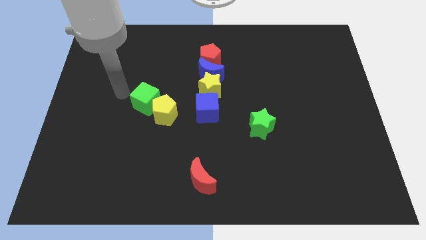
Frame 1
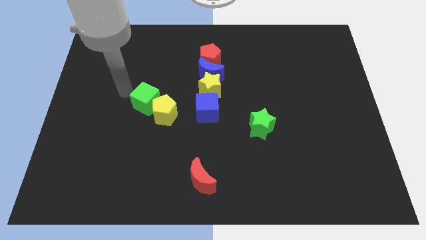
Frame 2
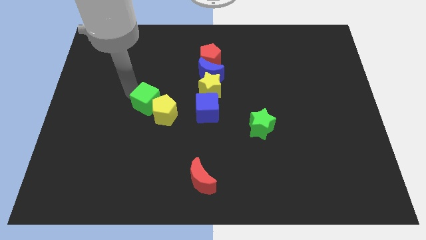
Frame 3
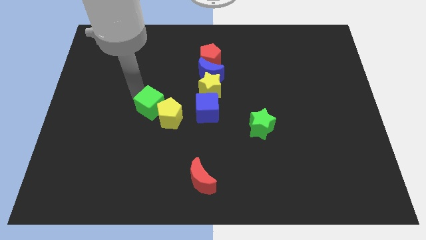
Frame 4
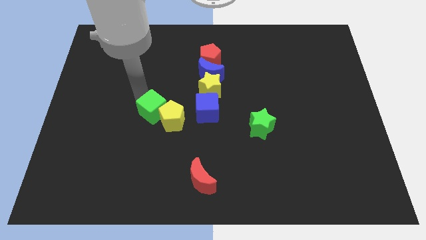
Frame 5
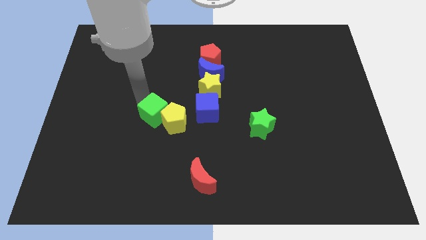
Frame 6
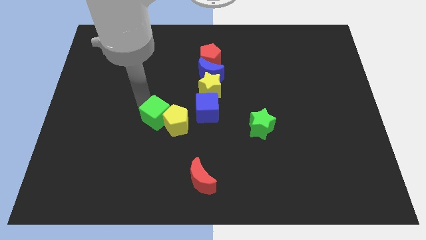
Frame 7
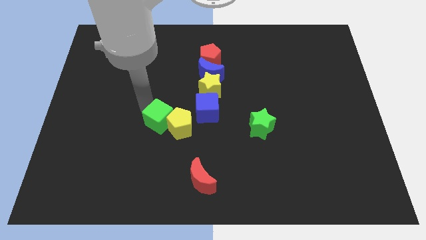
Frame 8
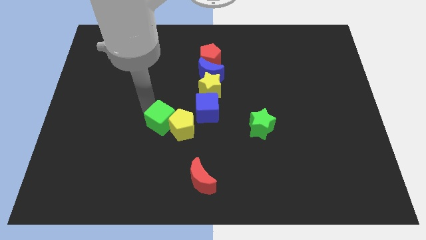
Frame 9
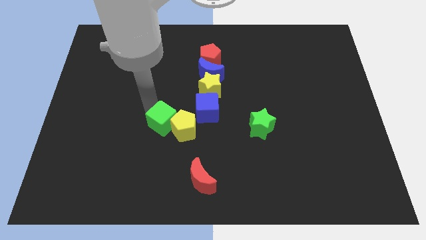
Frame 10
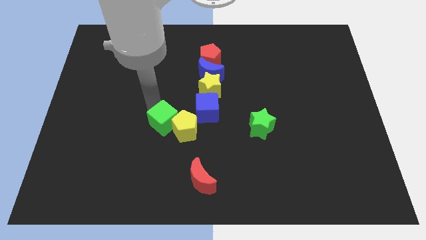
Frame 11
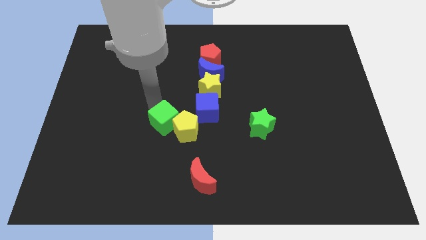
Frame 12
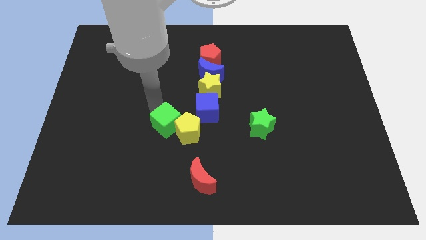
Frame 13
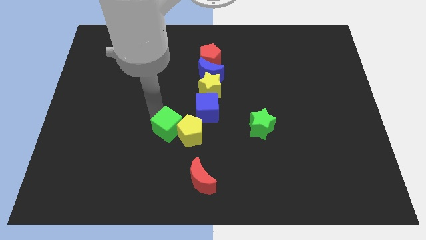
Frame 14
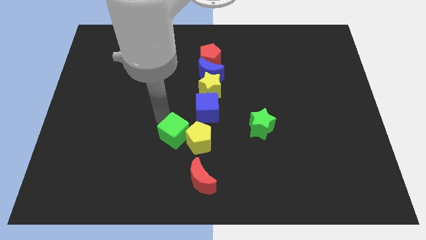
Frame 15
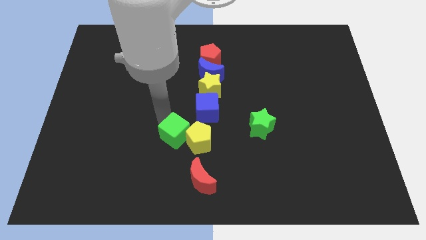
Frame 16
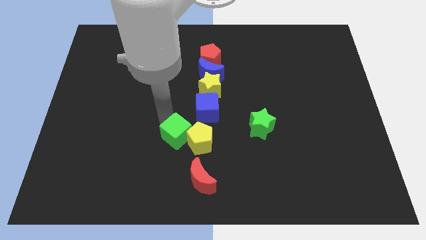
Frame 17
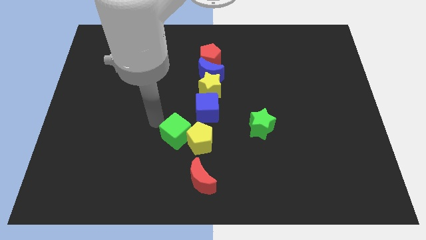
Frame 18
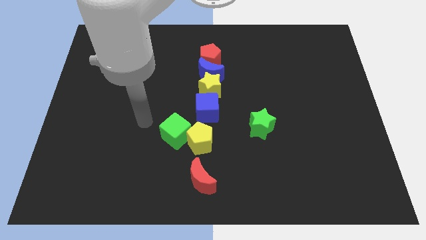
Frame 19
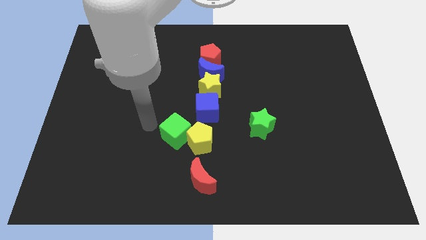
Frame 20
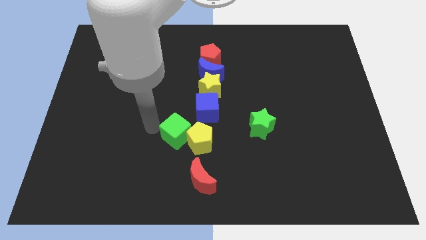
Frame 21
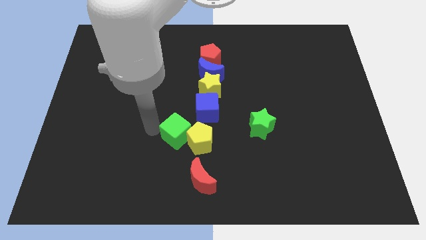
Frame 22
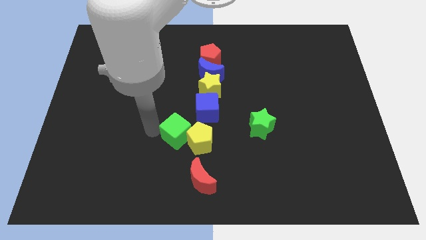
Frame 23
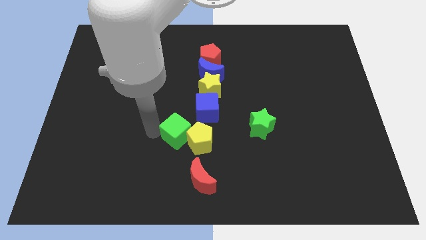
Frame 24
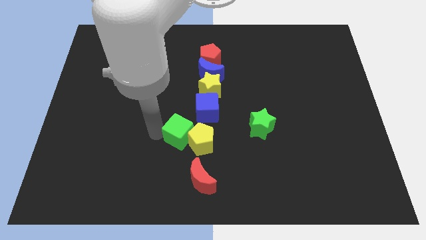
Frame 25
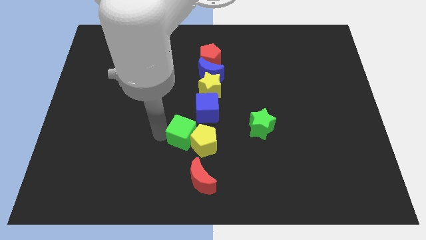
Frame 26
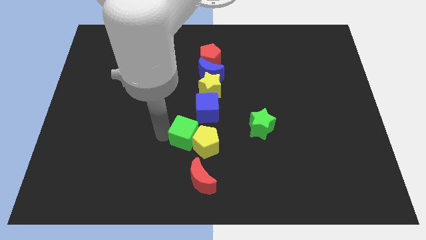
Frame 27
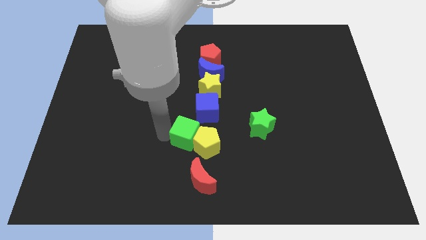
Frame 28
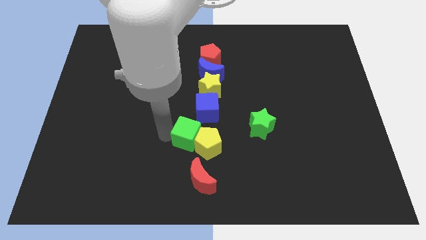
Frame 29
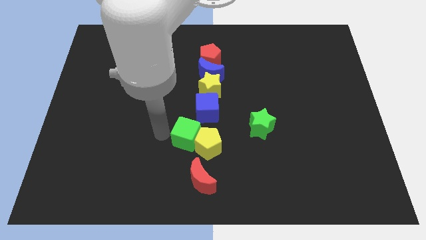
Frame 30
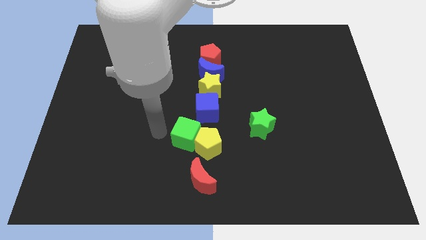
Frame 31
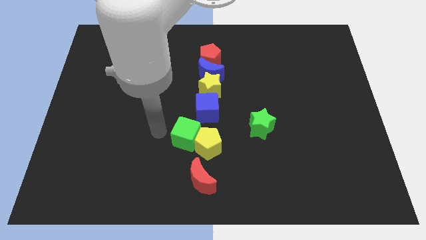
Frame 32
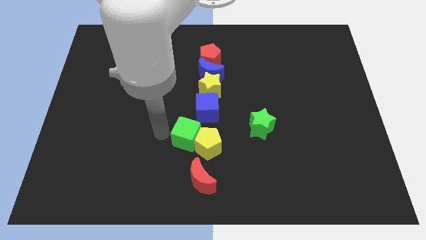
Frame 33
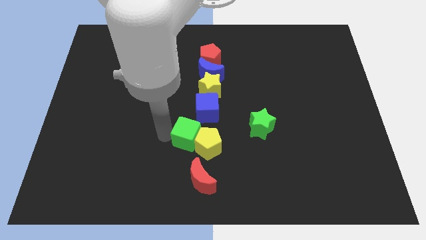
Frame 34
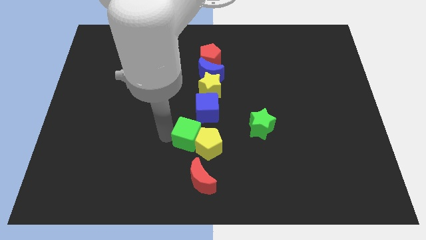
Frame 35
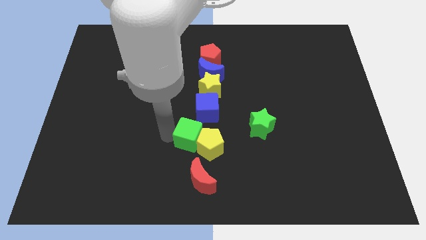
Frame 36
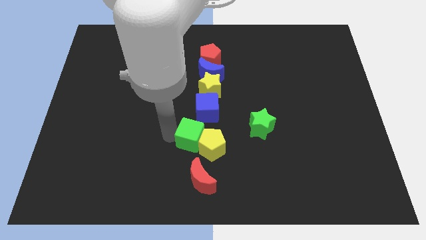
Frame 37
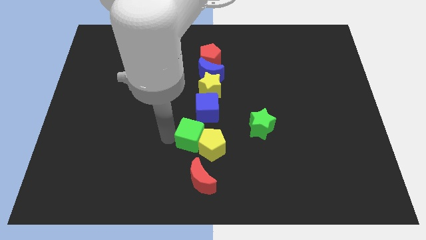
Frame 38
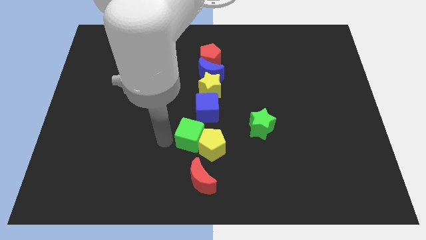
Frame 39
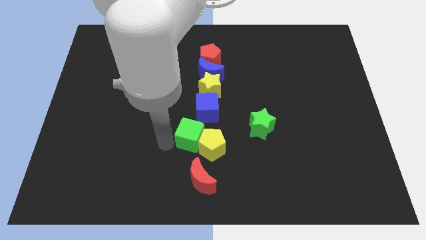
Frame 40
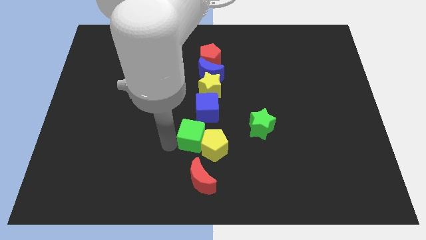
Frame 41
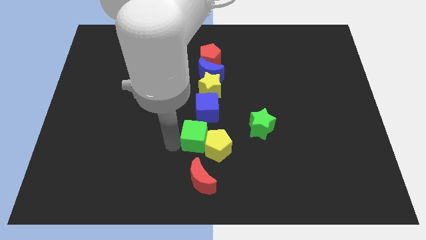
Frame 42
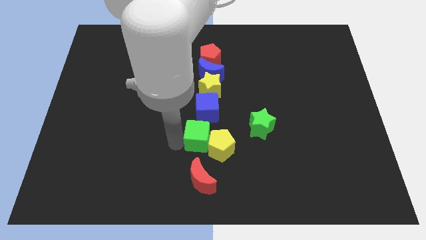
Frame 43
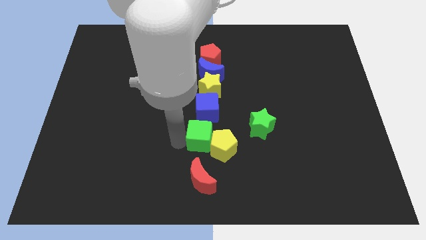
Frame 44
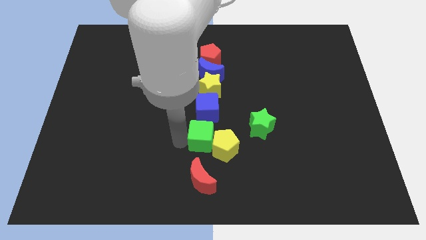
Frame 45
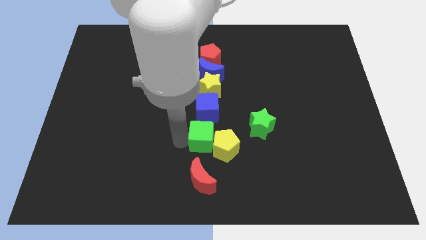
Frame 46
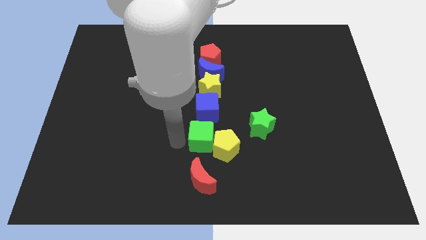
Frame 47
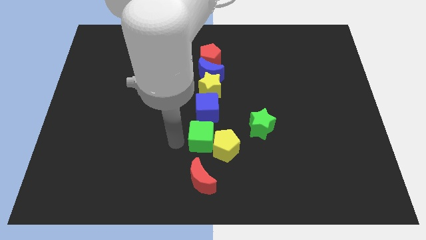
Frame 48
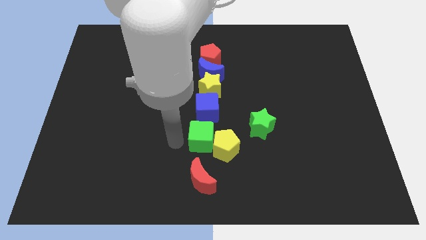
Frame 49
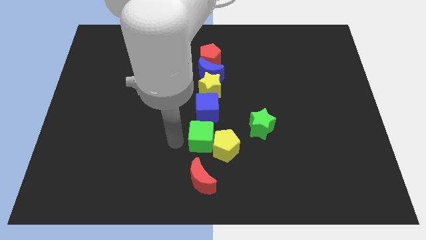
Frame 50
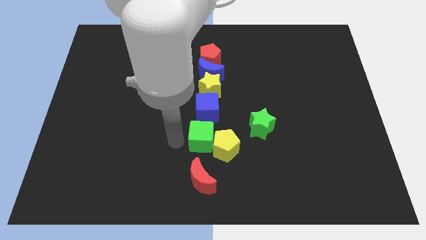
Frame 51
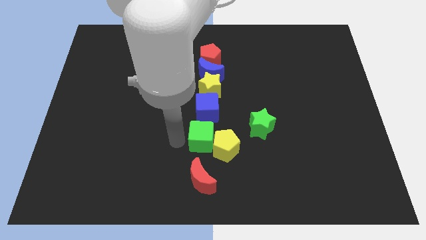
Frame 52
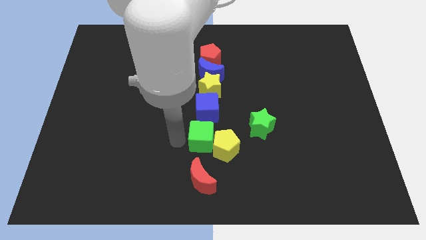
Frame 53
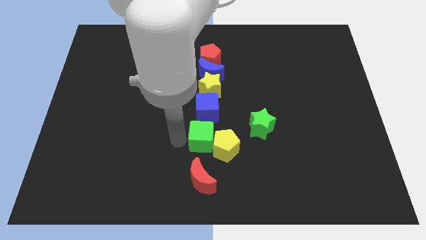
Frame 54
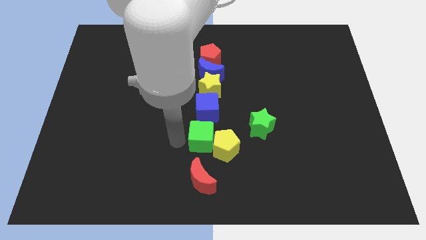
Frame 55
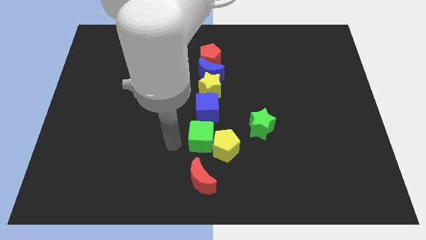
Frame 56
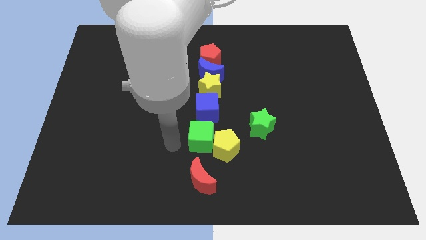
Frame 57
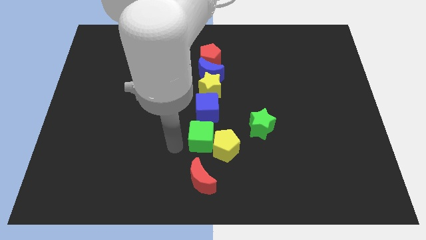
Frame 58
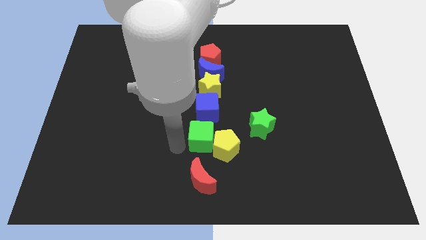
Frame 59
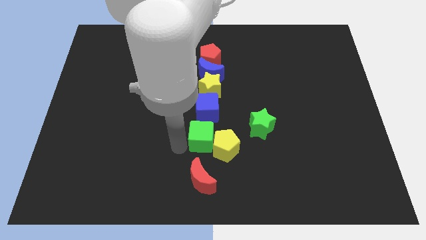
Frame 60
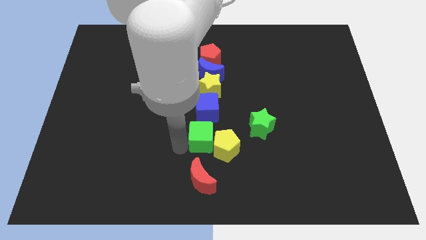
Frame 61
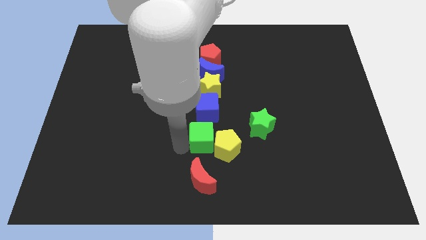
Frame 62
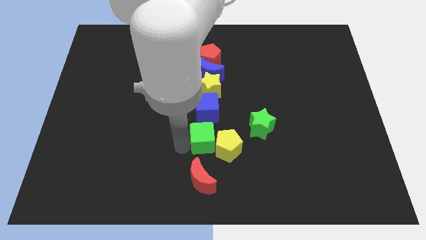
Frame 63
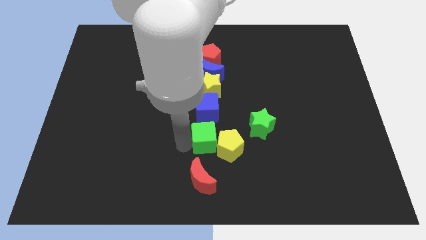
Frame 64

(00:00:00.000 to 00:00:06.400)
push the green cube in between the blue cube and the red crescent

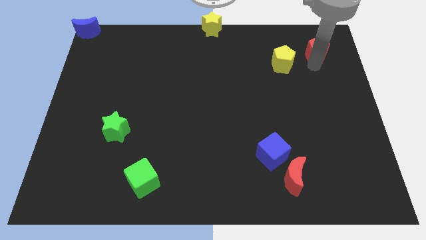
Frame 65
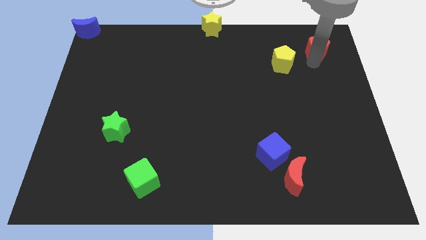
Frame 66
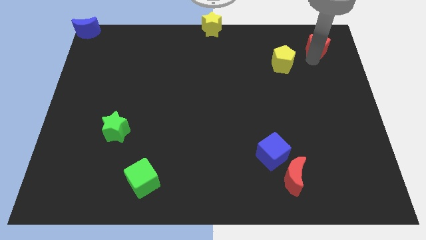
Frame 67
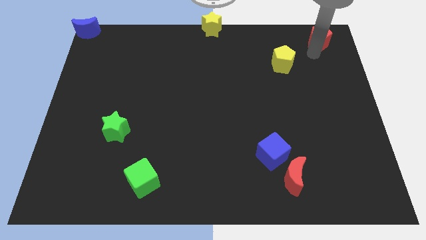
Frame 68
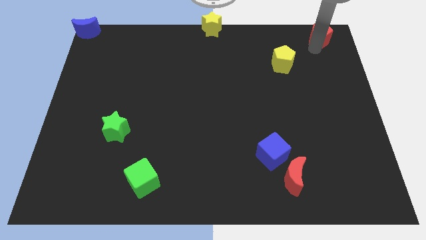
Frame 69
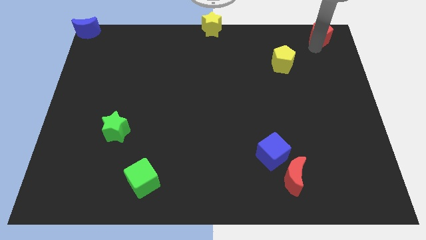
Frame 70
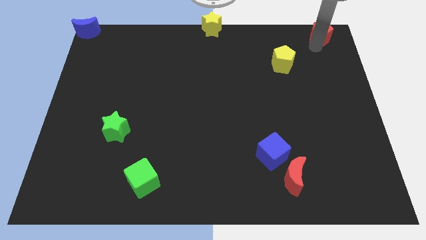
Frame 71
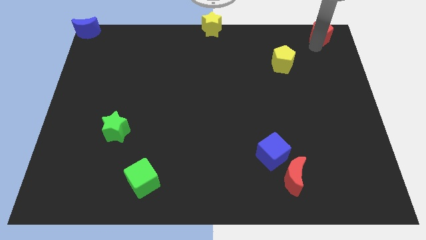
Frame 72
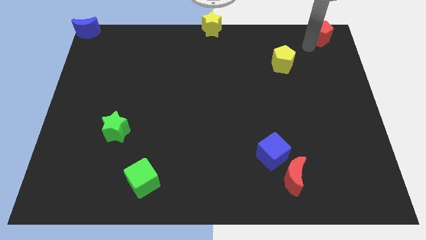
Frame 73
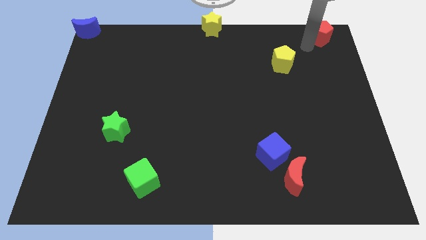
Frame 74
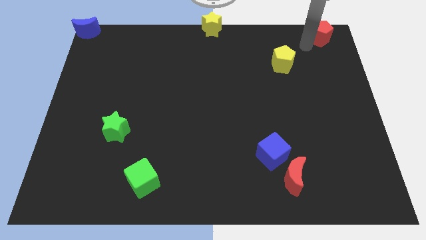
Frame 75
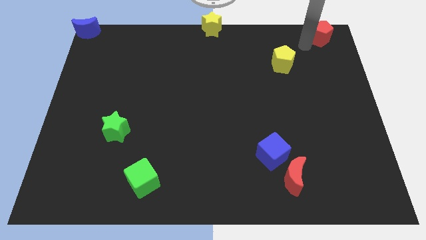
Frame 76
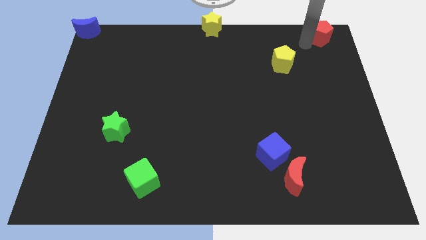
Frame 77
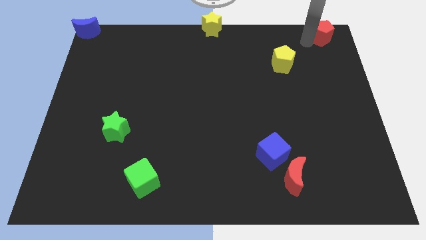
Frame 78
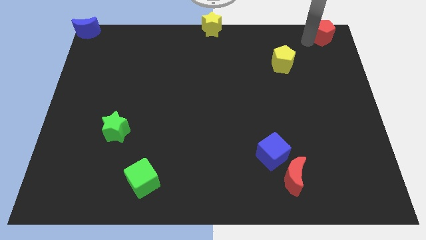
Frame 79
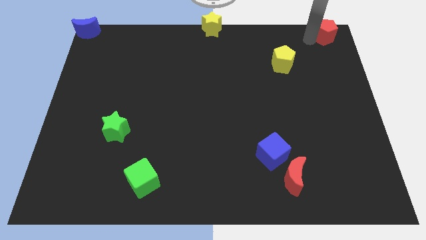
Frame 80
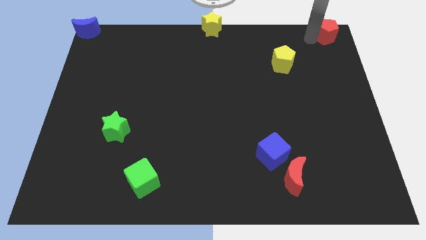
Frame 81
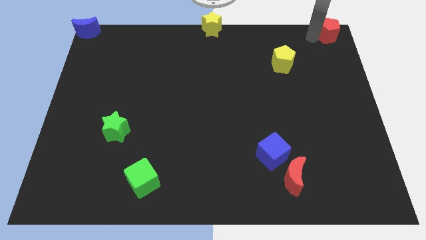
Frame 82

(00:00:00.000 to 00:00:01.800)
move the red pentagon to the top right corner

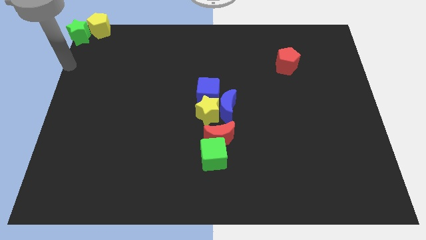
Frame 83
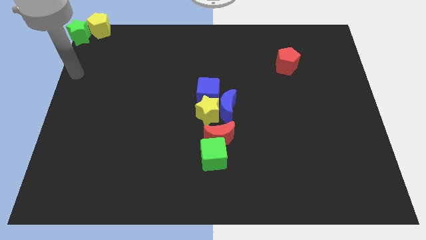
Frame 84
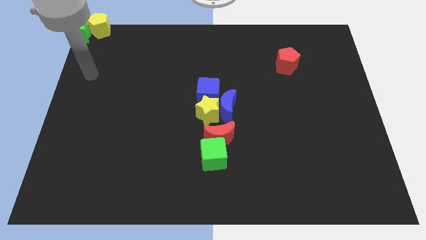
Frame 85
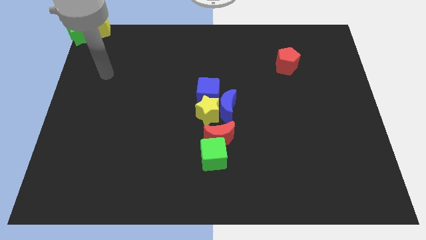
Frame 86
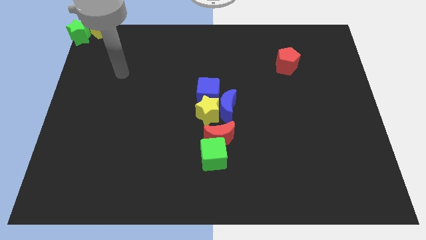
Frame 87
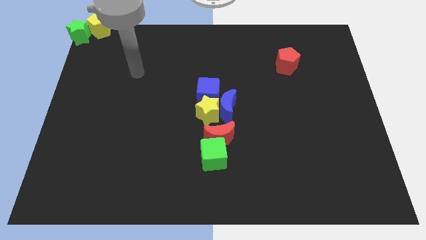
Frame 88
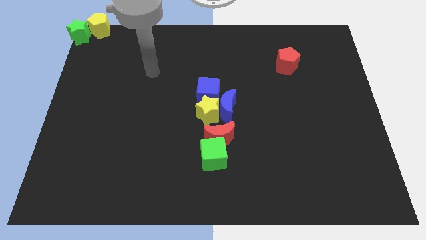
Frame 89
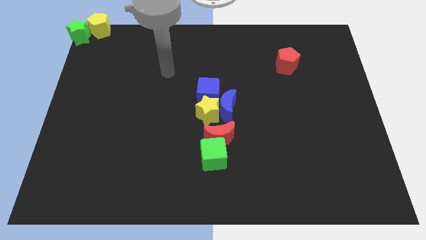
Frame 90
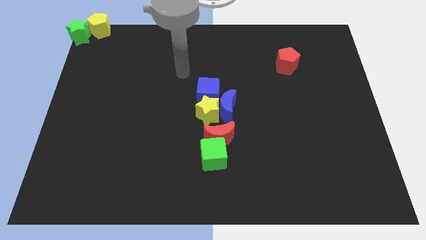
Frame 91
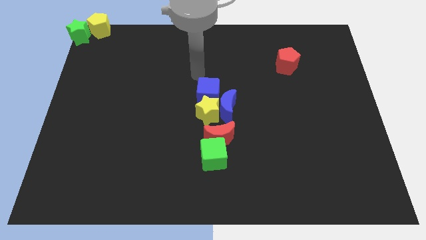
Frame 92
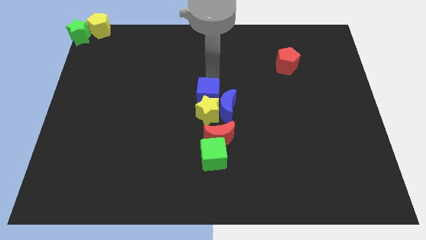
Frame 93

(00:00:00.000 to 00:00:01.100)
point your arm at the top of the blue cube
